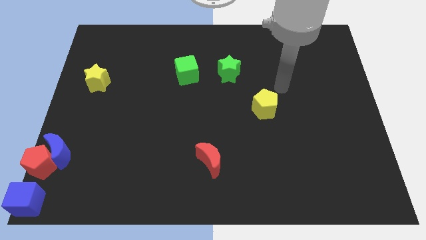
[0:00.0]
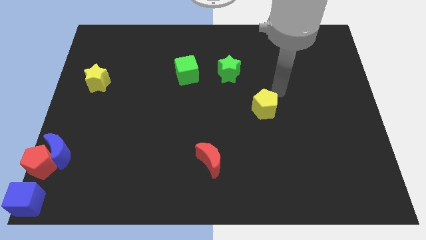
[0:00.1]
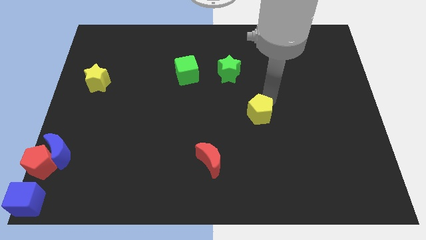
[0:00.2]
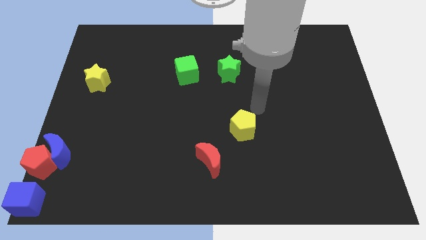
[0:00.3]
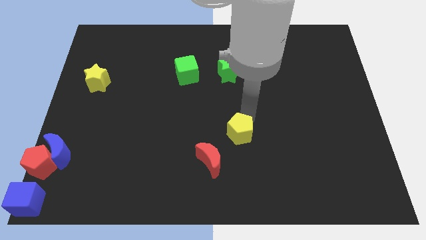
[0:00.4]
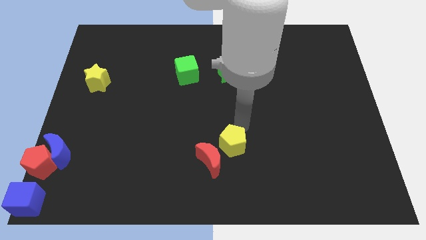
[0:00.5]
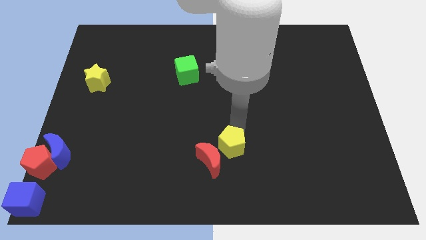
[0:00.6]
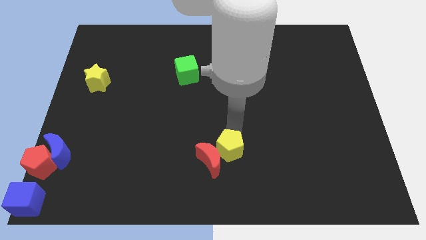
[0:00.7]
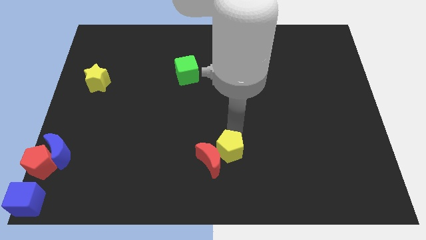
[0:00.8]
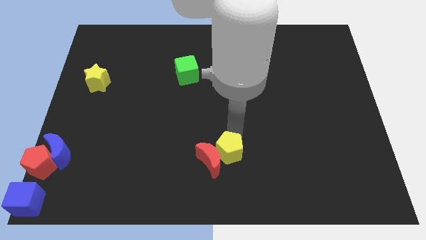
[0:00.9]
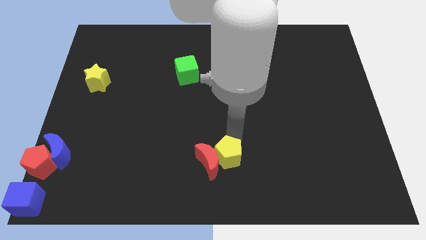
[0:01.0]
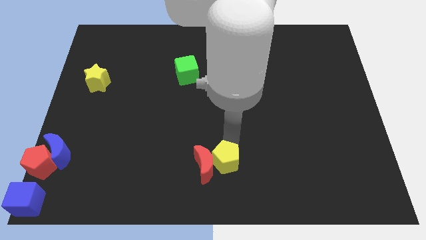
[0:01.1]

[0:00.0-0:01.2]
push the yellow pentagon to the right of the red crescent

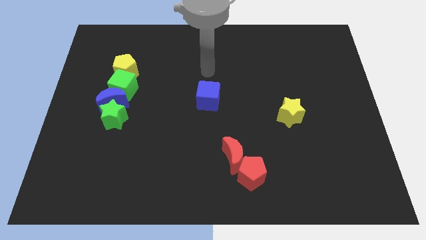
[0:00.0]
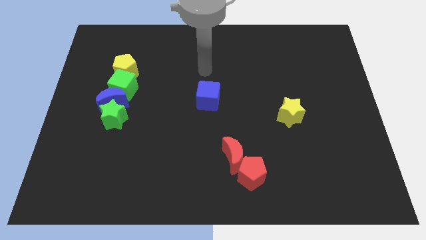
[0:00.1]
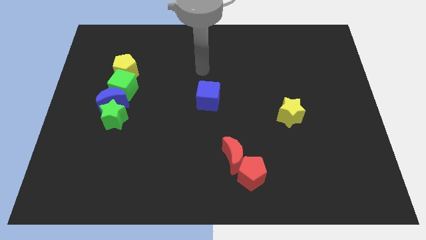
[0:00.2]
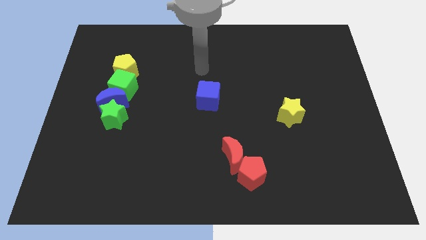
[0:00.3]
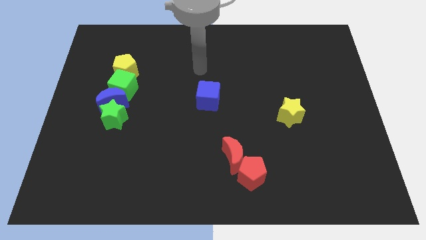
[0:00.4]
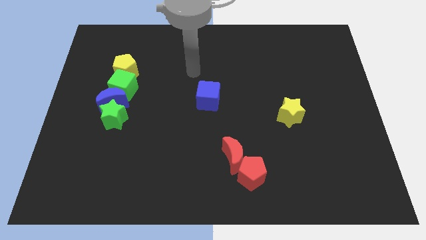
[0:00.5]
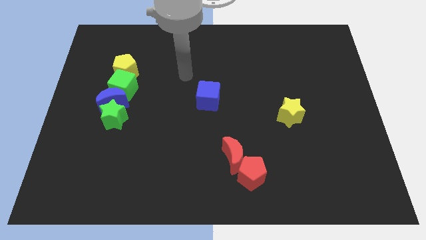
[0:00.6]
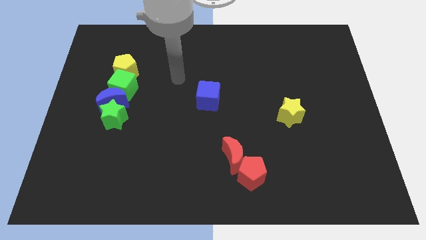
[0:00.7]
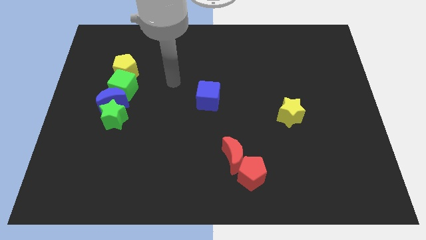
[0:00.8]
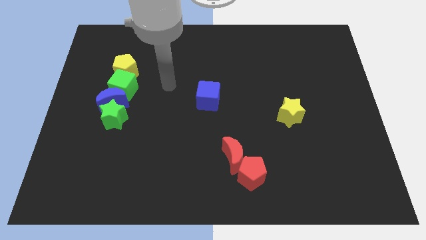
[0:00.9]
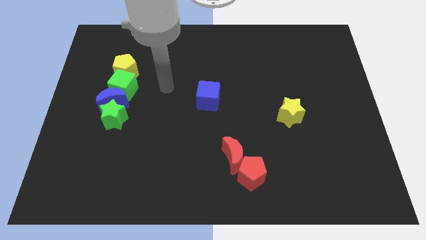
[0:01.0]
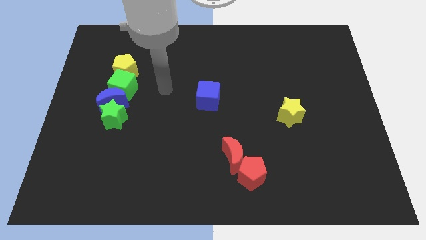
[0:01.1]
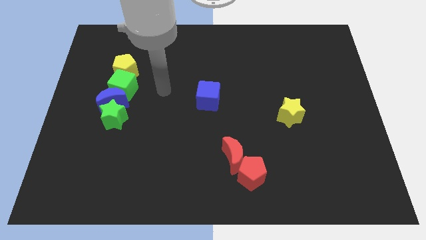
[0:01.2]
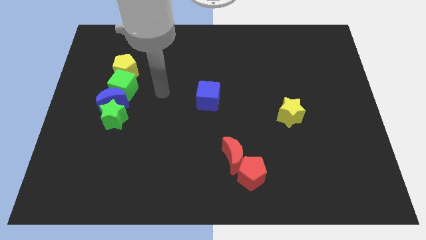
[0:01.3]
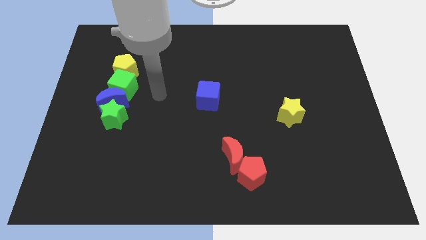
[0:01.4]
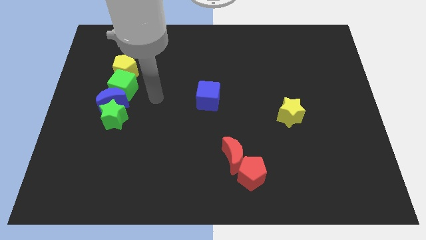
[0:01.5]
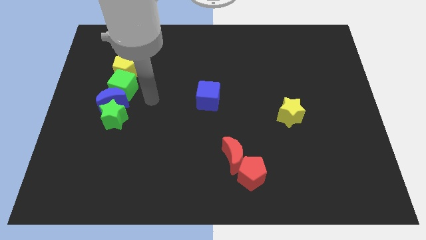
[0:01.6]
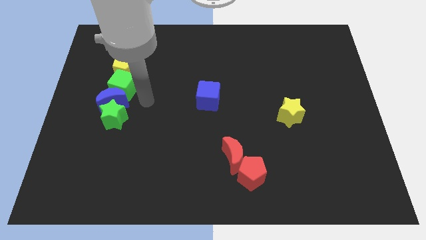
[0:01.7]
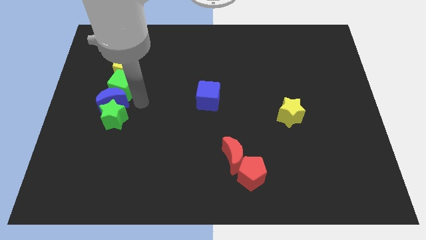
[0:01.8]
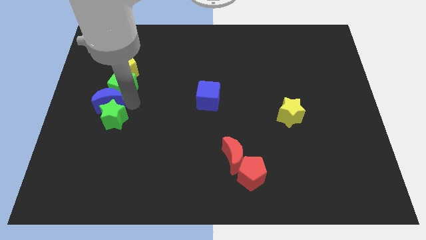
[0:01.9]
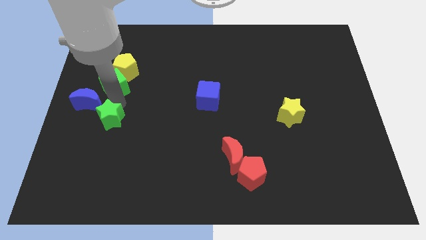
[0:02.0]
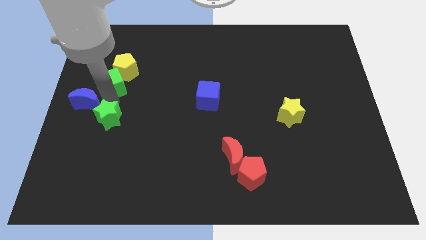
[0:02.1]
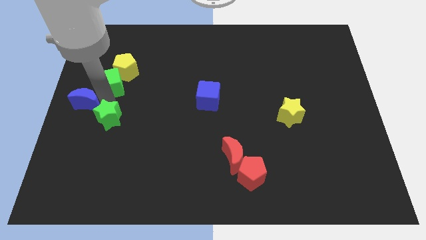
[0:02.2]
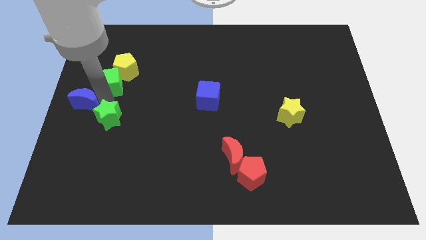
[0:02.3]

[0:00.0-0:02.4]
push the blue moon slightly to the left

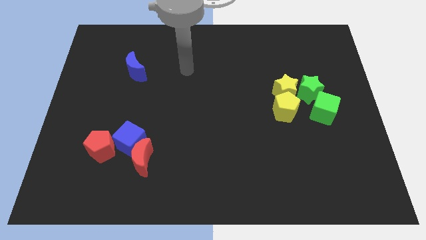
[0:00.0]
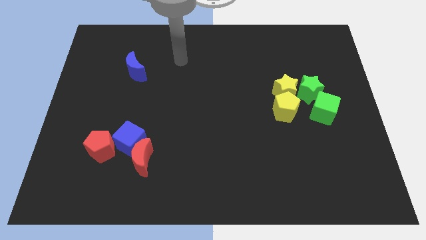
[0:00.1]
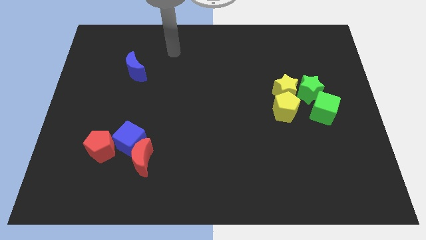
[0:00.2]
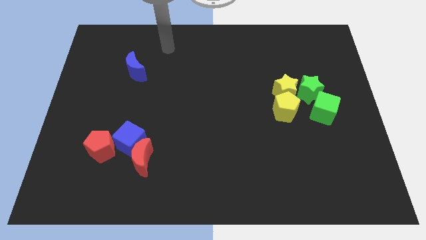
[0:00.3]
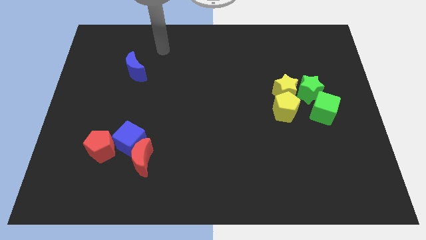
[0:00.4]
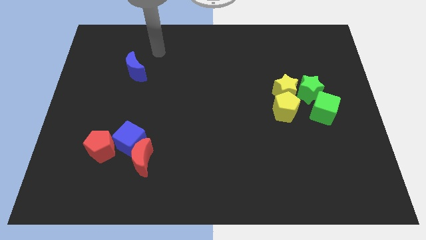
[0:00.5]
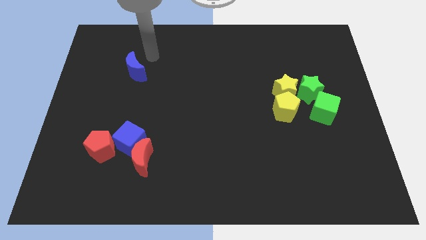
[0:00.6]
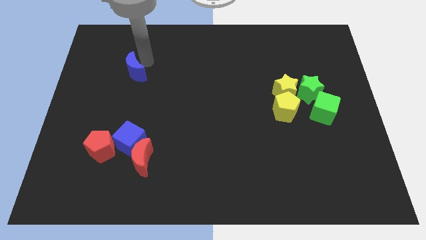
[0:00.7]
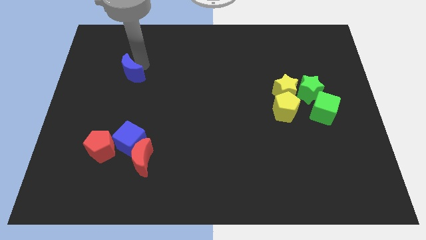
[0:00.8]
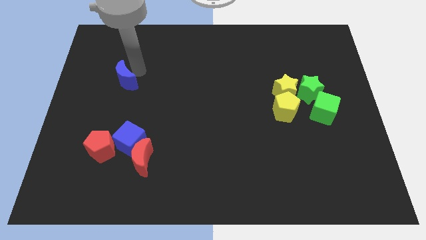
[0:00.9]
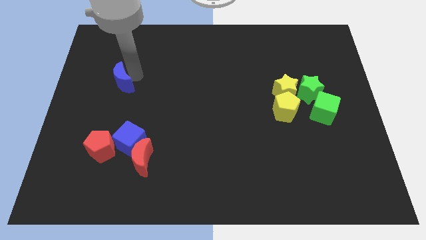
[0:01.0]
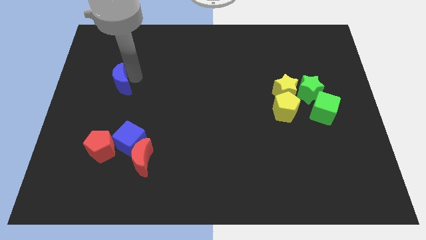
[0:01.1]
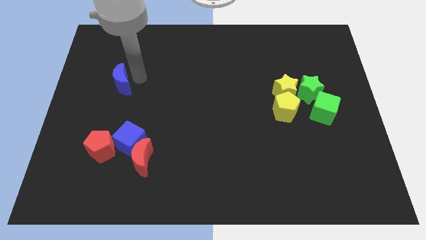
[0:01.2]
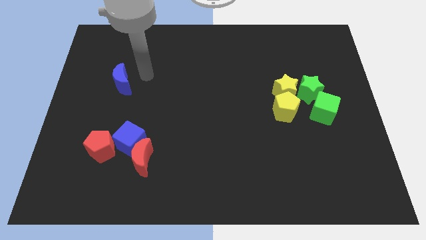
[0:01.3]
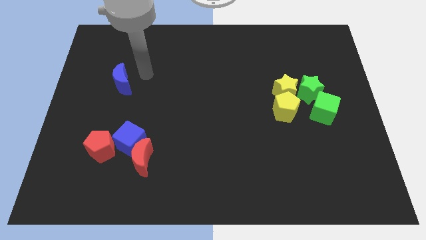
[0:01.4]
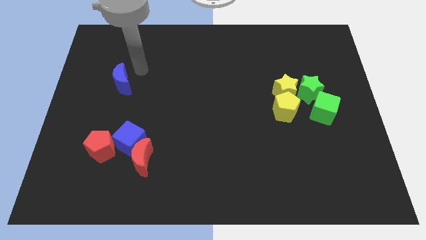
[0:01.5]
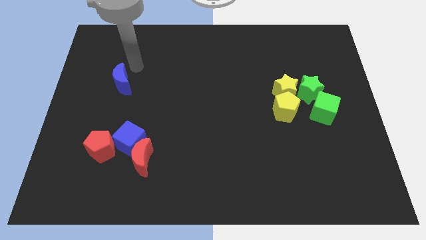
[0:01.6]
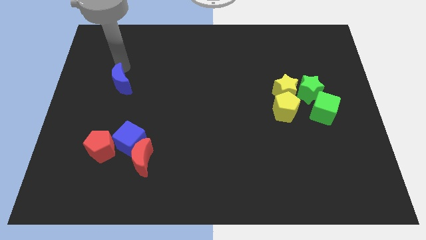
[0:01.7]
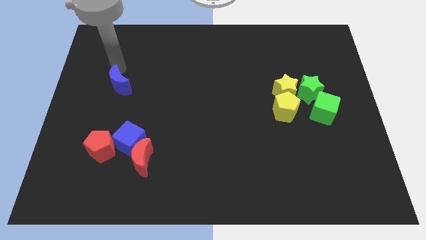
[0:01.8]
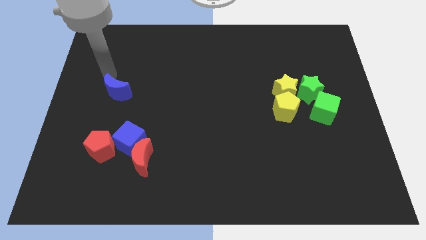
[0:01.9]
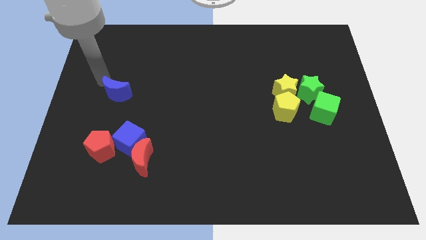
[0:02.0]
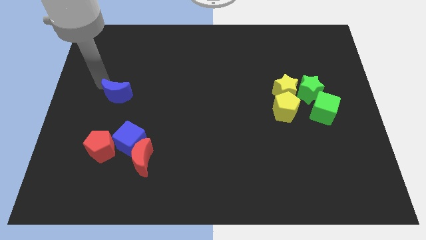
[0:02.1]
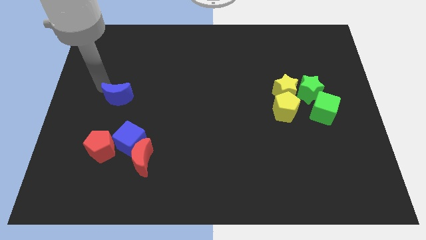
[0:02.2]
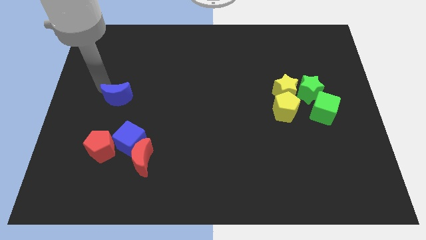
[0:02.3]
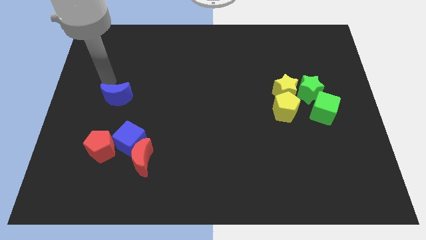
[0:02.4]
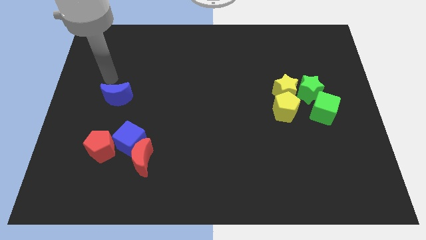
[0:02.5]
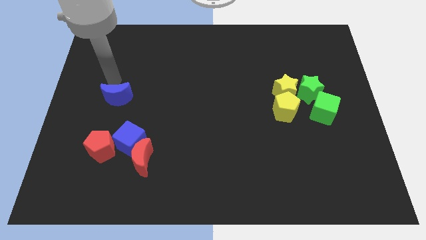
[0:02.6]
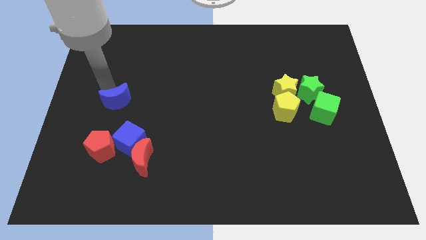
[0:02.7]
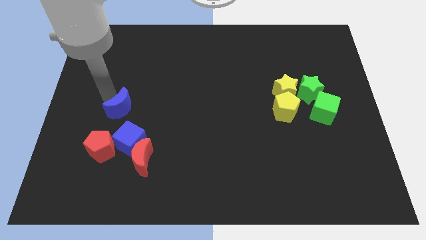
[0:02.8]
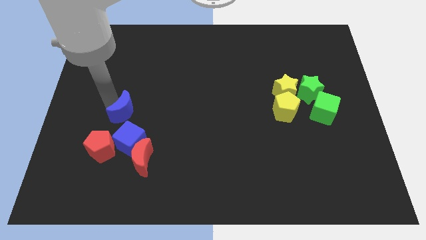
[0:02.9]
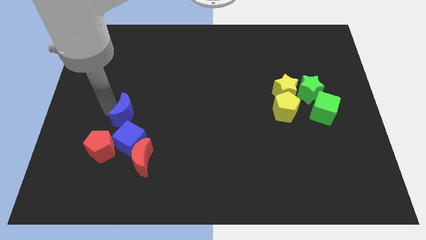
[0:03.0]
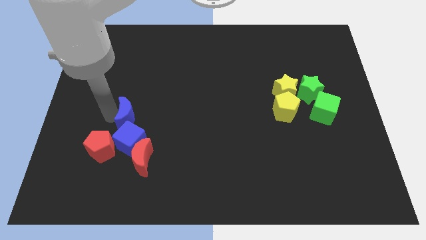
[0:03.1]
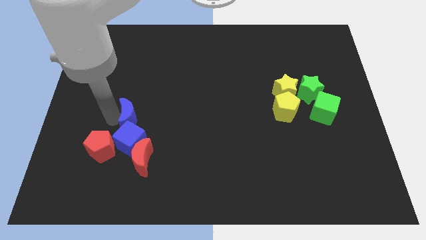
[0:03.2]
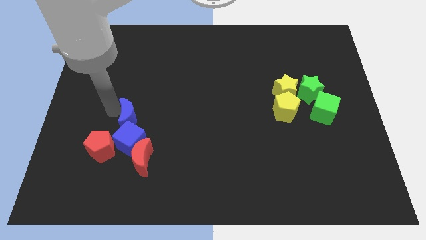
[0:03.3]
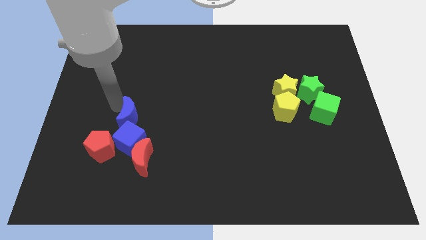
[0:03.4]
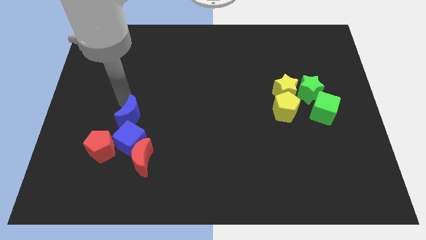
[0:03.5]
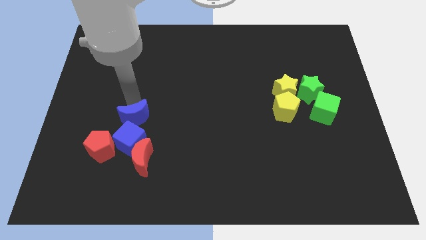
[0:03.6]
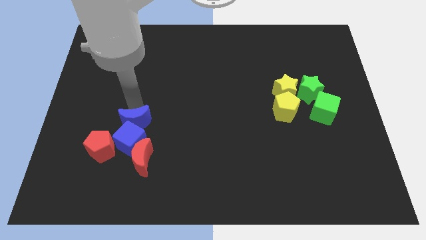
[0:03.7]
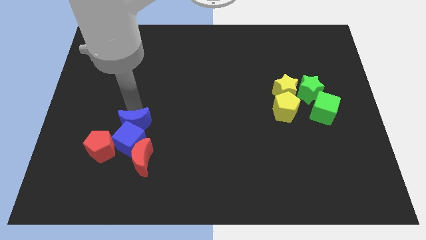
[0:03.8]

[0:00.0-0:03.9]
move the blue crescent into the blue cube

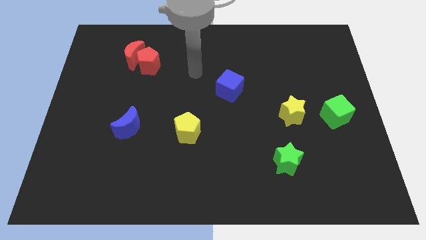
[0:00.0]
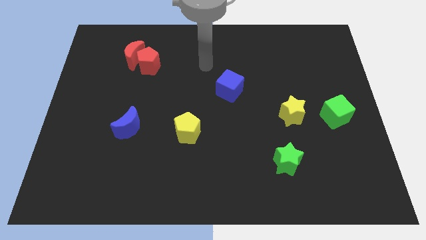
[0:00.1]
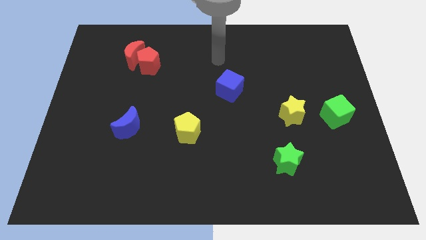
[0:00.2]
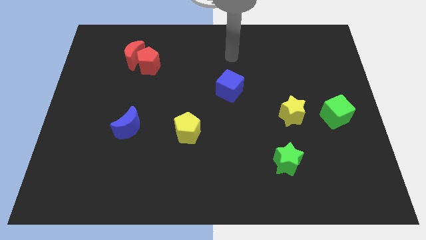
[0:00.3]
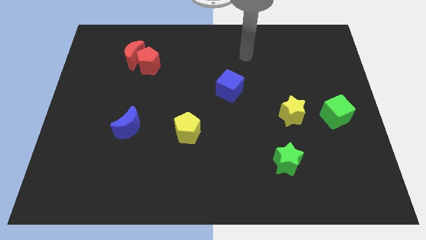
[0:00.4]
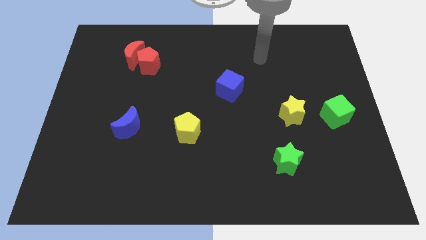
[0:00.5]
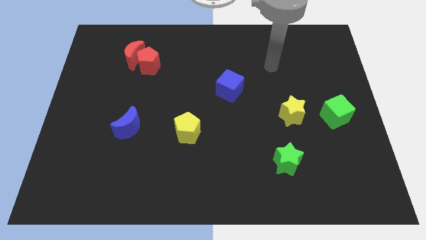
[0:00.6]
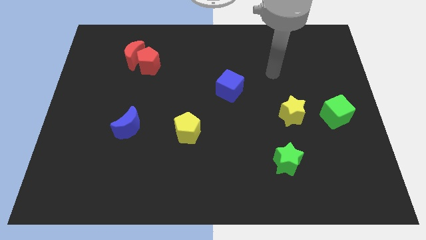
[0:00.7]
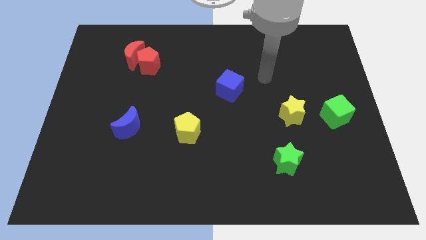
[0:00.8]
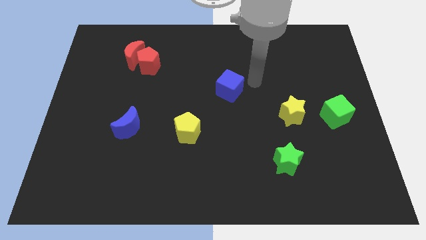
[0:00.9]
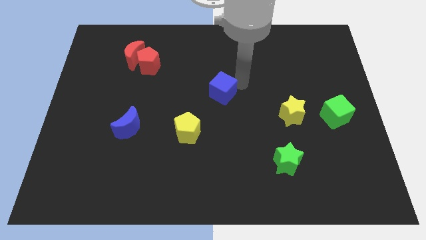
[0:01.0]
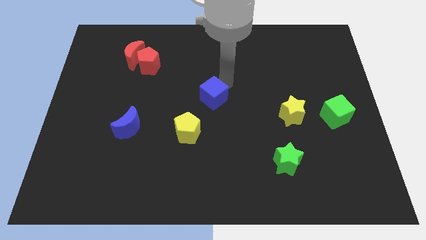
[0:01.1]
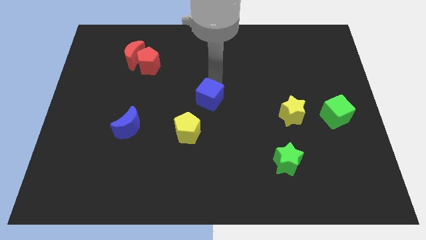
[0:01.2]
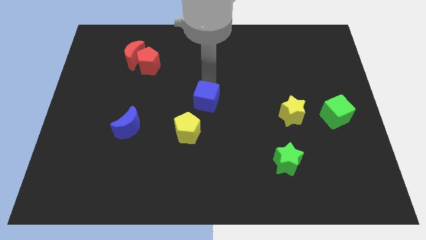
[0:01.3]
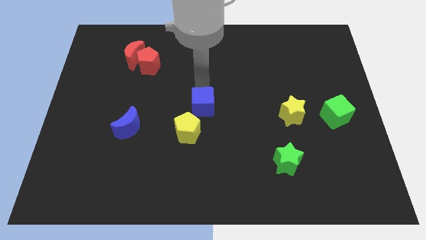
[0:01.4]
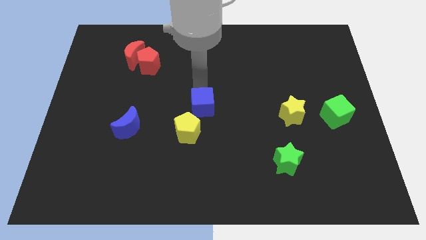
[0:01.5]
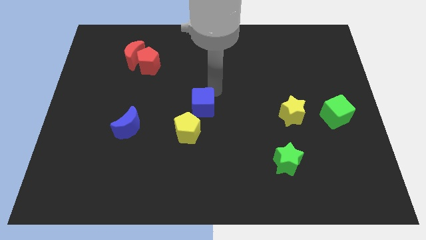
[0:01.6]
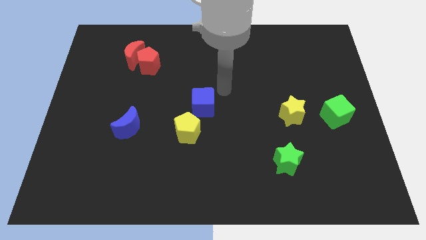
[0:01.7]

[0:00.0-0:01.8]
slide the blue cube close to the yellow pentagon
